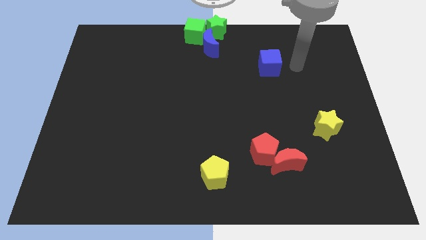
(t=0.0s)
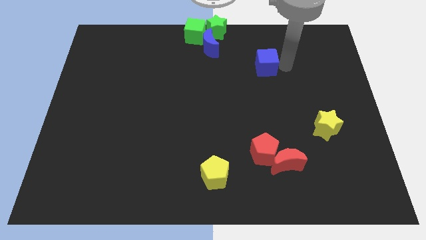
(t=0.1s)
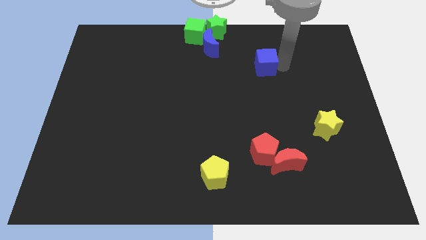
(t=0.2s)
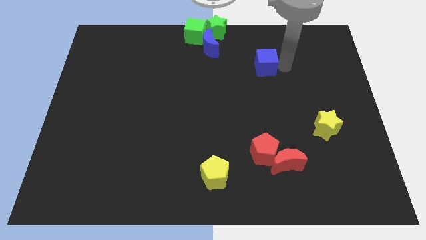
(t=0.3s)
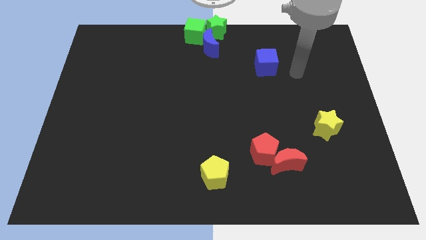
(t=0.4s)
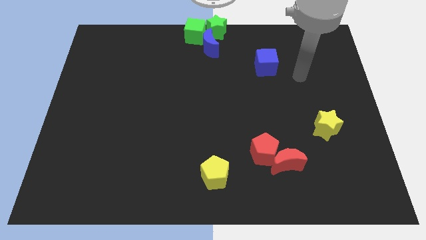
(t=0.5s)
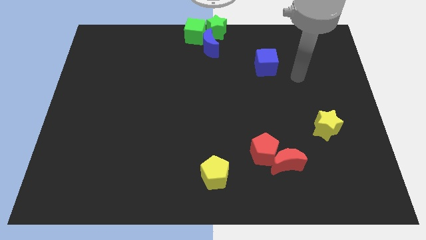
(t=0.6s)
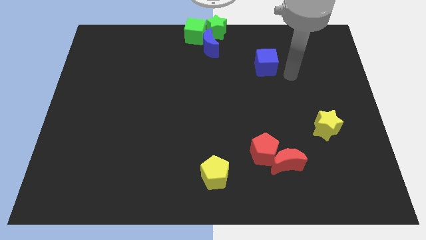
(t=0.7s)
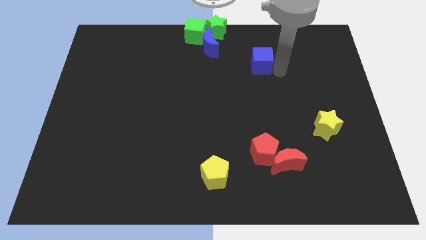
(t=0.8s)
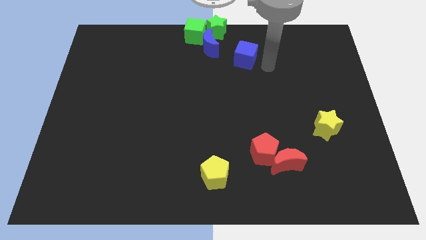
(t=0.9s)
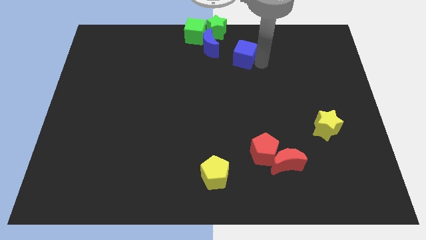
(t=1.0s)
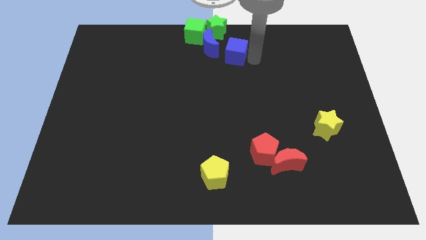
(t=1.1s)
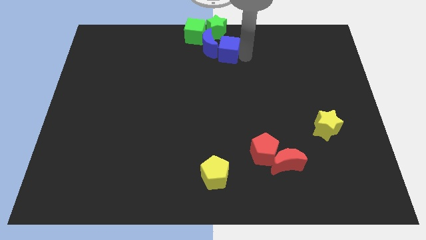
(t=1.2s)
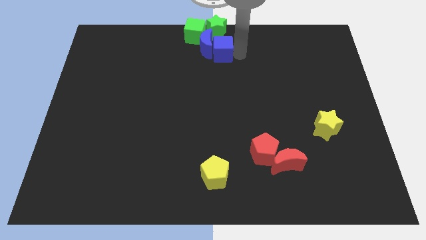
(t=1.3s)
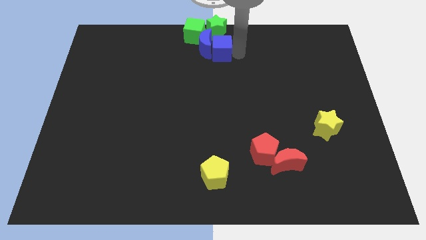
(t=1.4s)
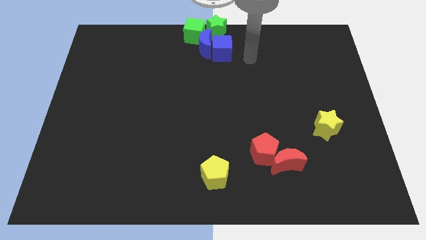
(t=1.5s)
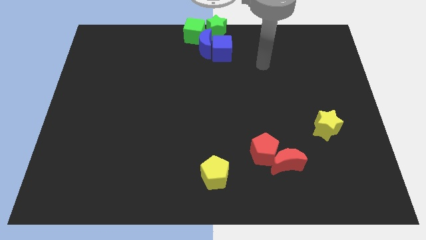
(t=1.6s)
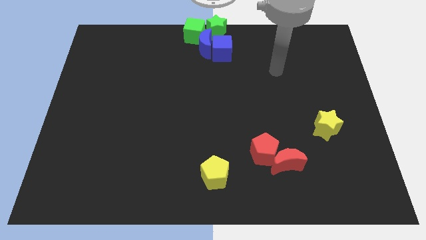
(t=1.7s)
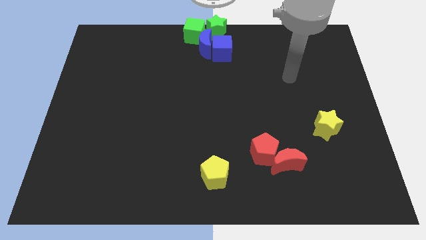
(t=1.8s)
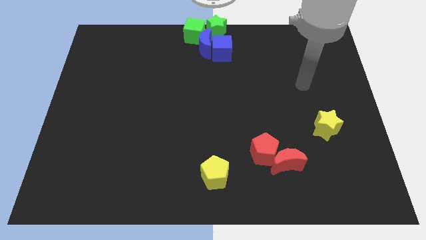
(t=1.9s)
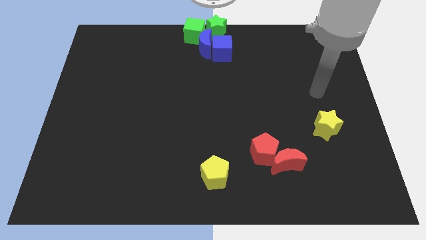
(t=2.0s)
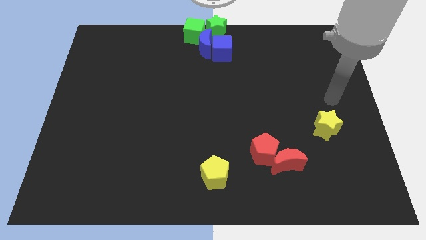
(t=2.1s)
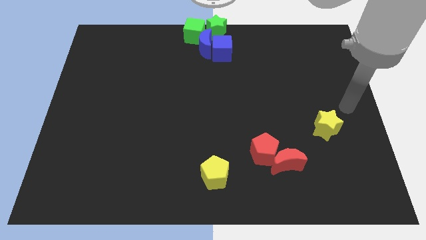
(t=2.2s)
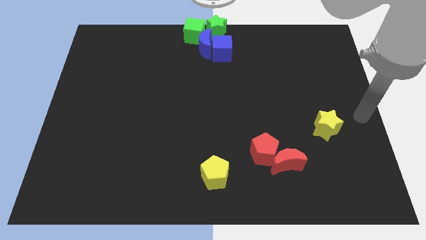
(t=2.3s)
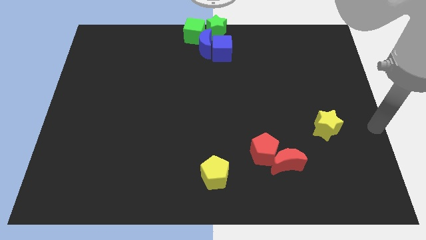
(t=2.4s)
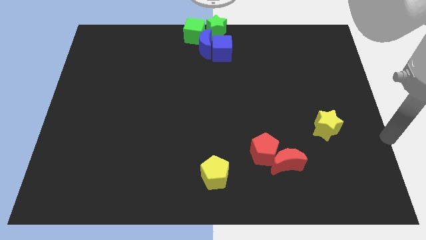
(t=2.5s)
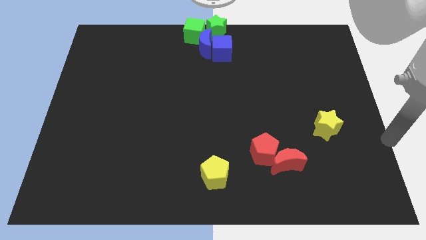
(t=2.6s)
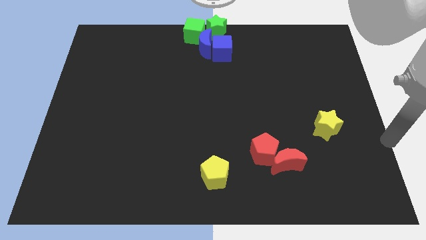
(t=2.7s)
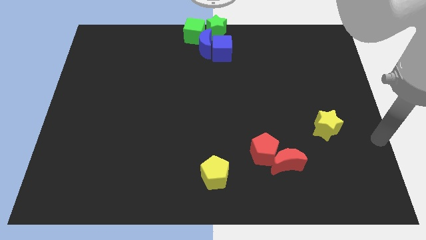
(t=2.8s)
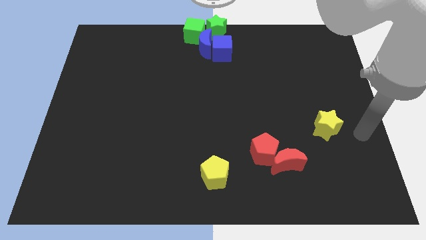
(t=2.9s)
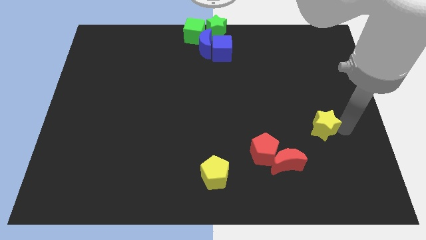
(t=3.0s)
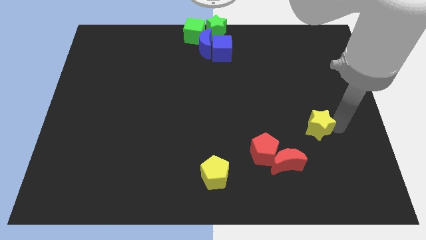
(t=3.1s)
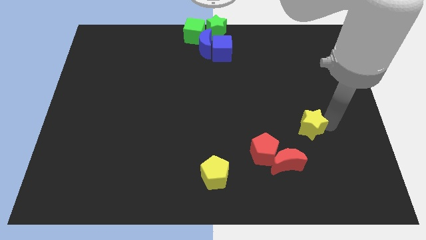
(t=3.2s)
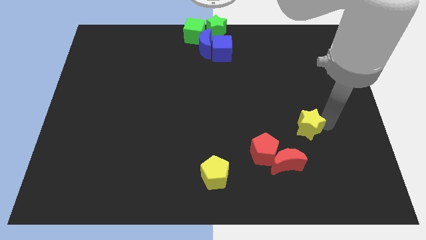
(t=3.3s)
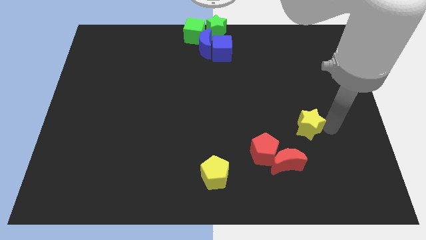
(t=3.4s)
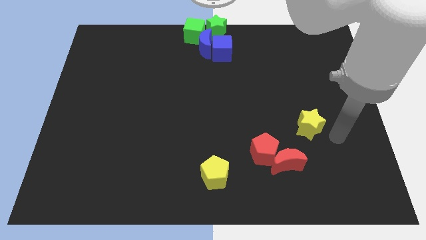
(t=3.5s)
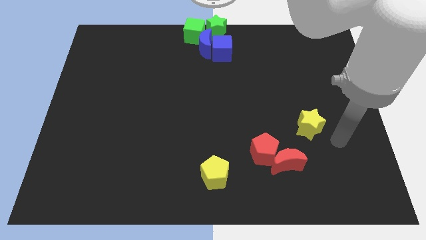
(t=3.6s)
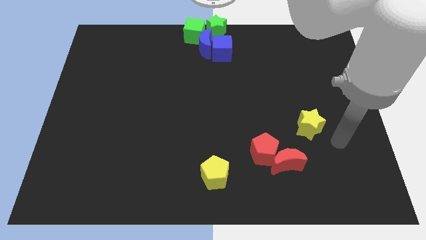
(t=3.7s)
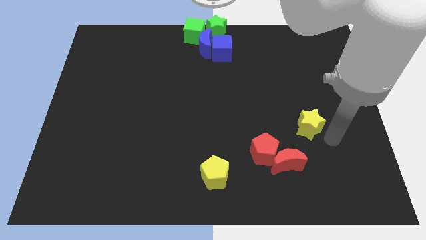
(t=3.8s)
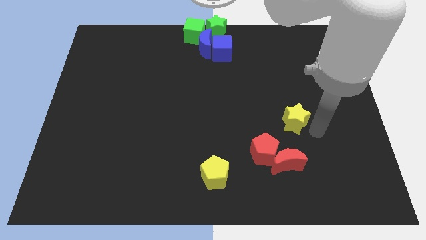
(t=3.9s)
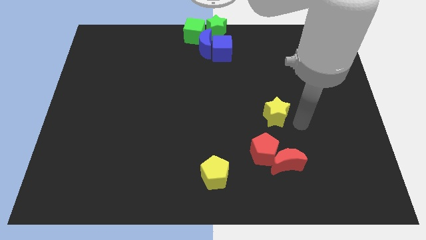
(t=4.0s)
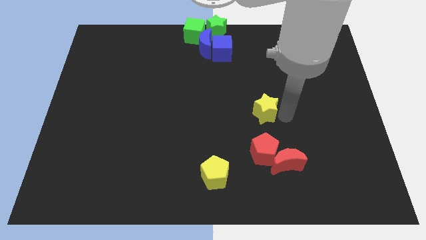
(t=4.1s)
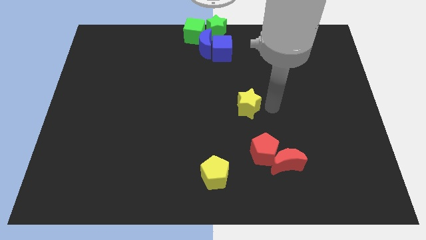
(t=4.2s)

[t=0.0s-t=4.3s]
push the yellow star to the top of the red pentagon

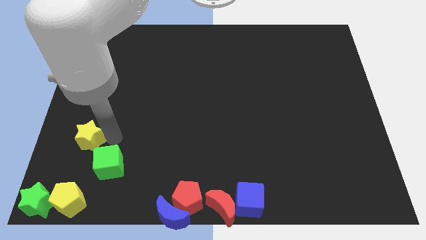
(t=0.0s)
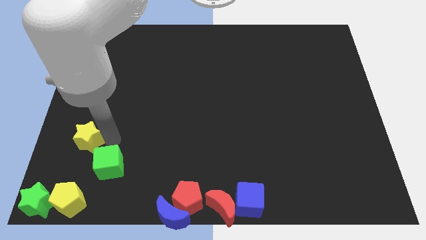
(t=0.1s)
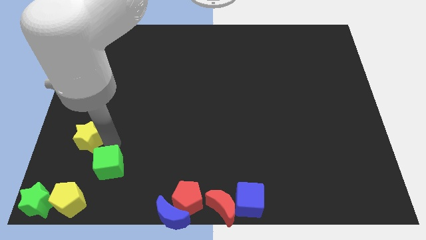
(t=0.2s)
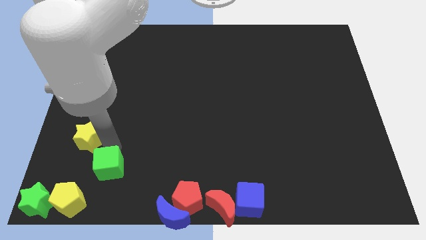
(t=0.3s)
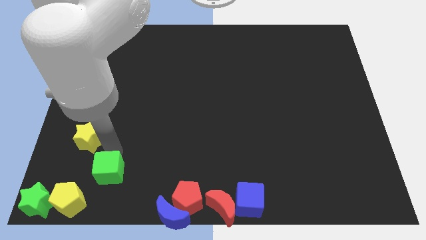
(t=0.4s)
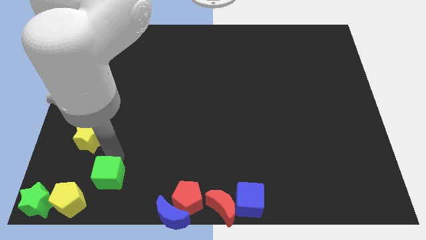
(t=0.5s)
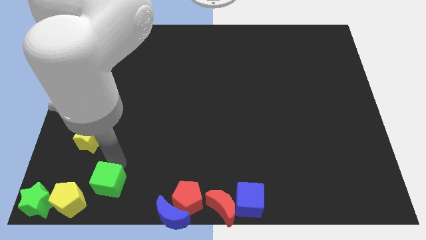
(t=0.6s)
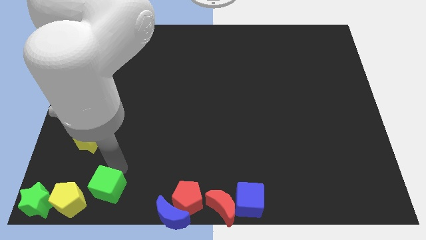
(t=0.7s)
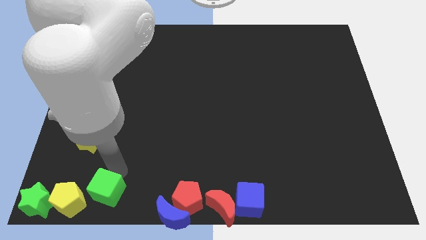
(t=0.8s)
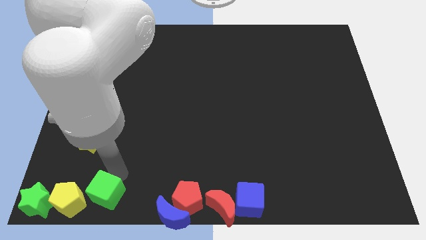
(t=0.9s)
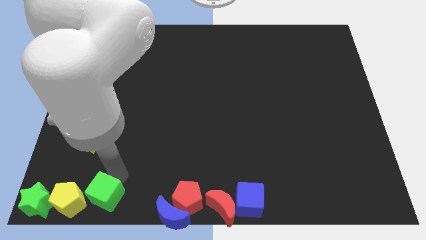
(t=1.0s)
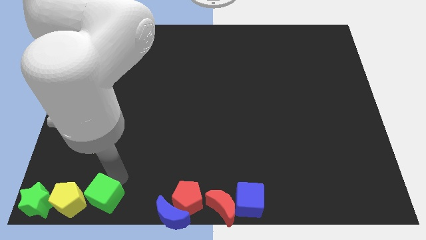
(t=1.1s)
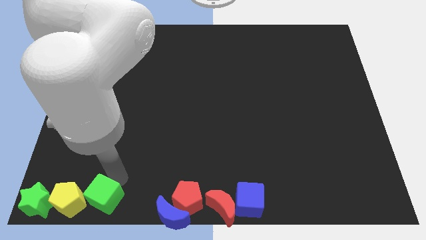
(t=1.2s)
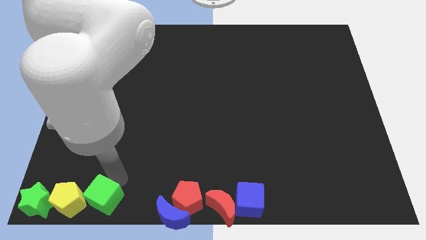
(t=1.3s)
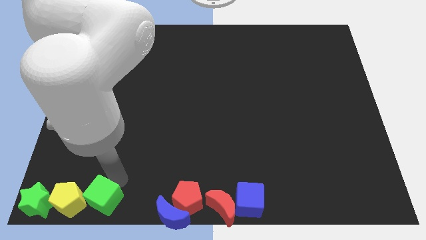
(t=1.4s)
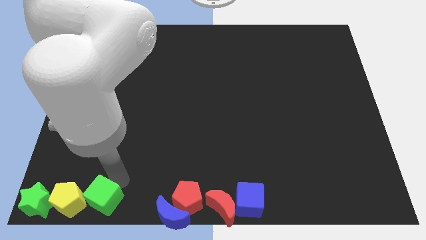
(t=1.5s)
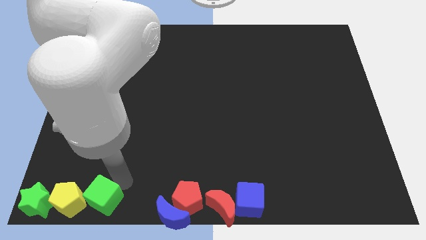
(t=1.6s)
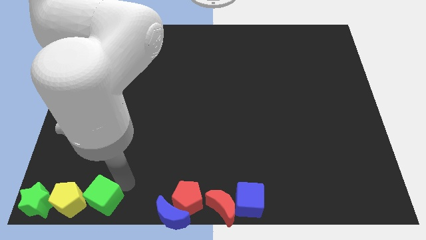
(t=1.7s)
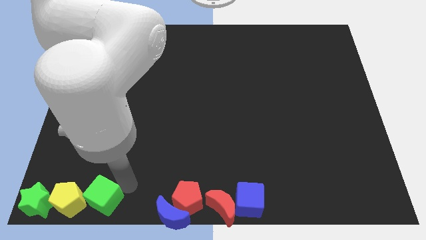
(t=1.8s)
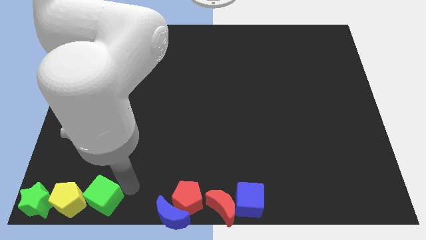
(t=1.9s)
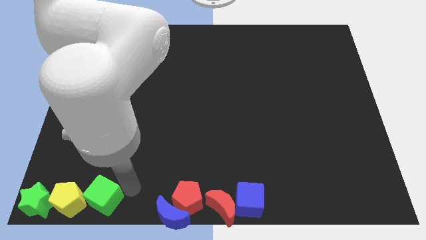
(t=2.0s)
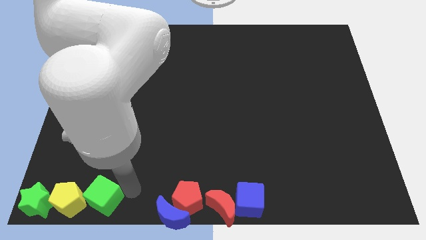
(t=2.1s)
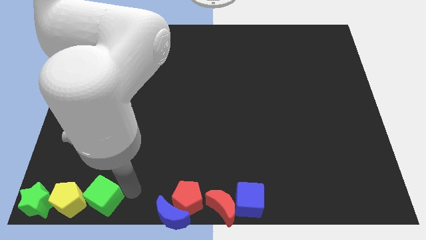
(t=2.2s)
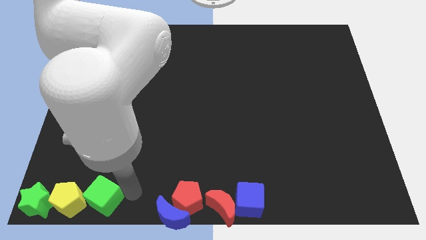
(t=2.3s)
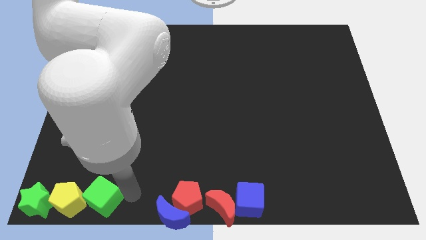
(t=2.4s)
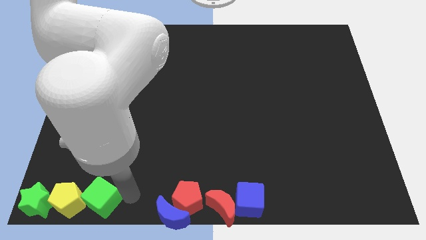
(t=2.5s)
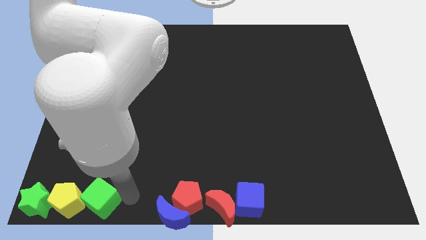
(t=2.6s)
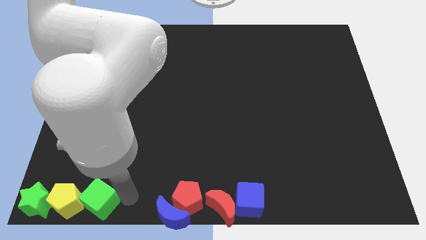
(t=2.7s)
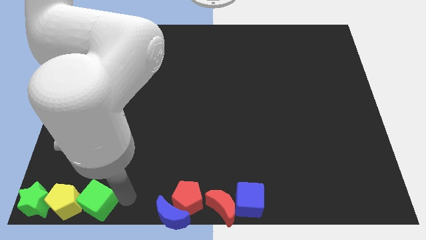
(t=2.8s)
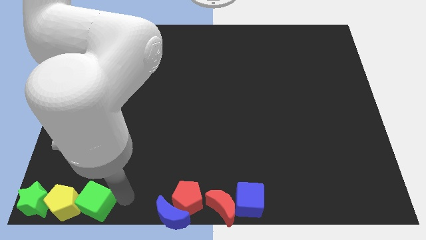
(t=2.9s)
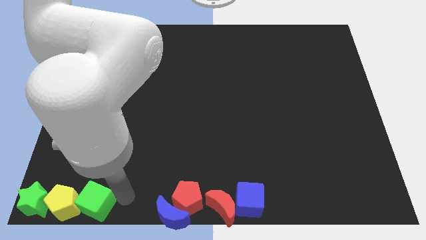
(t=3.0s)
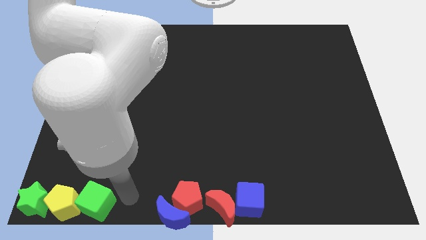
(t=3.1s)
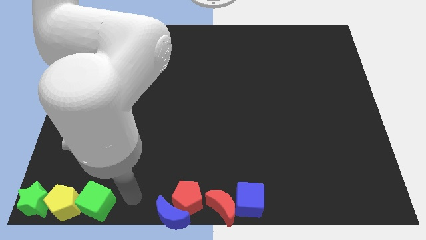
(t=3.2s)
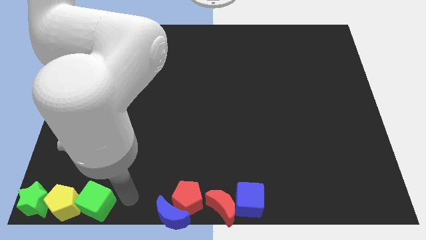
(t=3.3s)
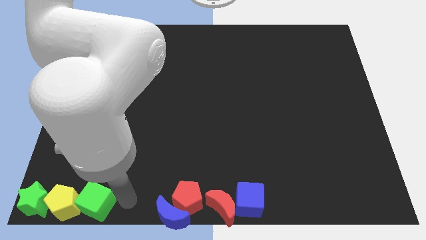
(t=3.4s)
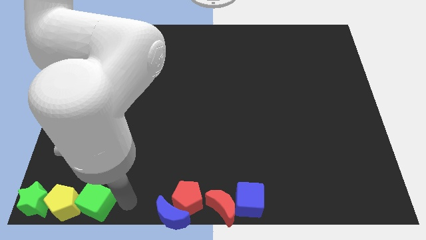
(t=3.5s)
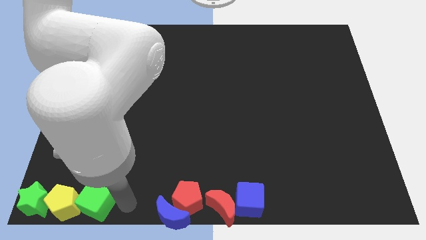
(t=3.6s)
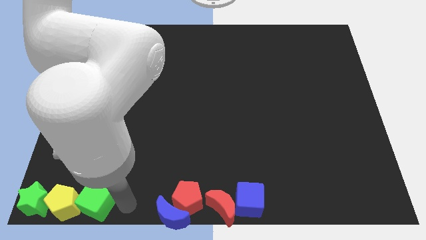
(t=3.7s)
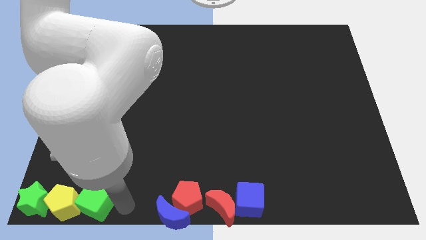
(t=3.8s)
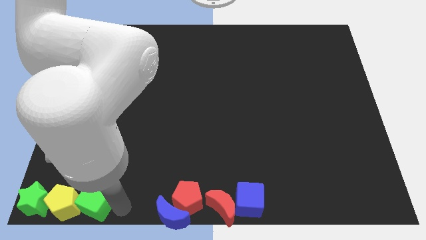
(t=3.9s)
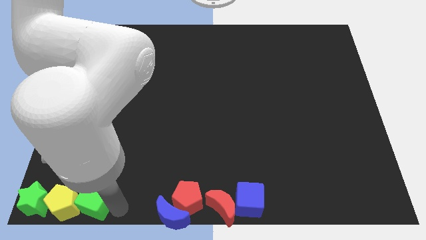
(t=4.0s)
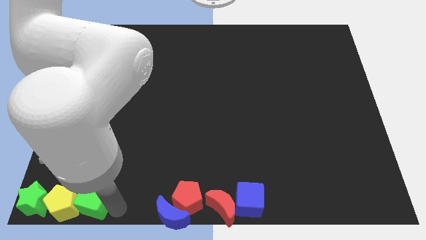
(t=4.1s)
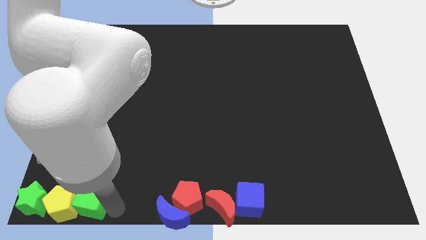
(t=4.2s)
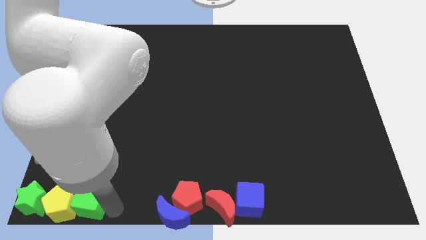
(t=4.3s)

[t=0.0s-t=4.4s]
slide the green cube into the right side of the yellow pentagon

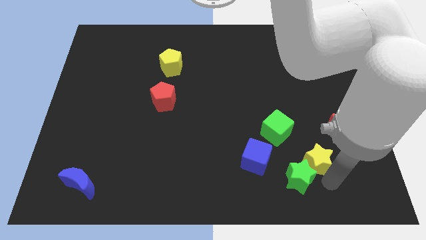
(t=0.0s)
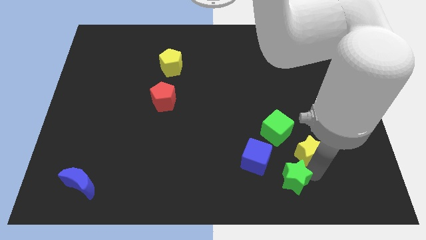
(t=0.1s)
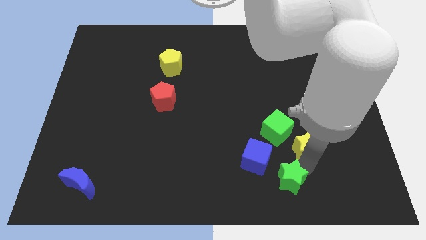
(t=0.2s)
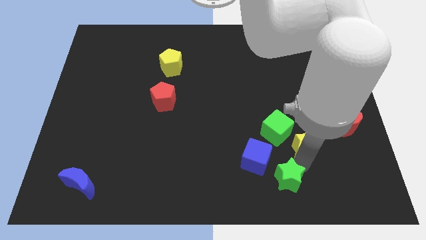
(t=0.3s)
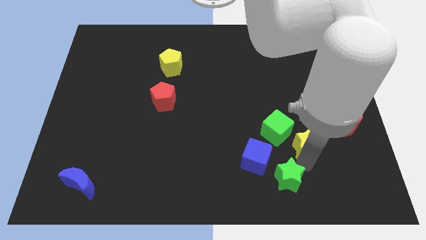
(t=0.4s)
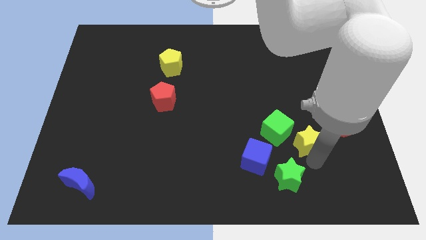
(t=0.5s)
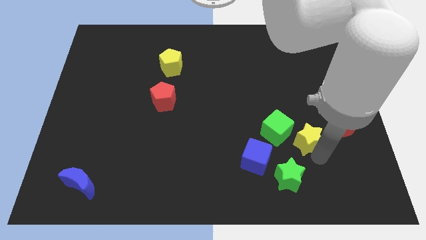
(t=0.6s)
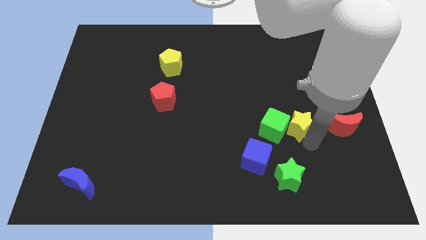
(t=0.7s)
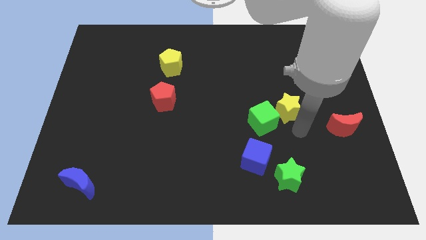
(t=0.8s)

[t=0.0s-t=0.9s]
move yellow star and green cube slightly up
